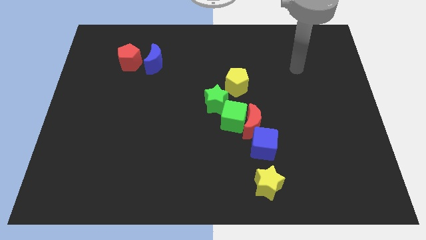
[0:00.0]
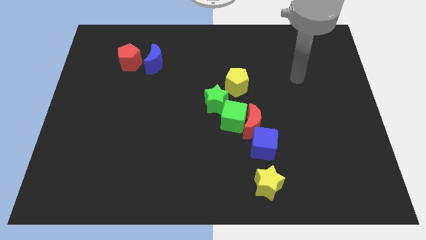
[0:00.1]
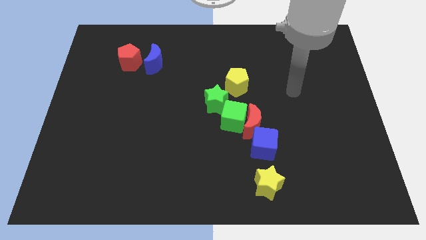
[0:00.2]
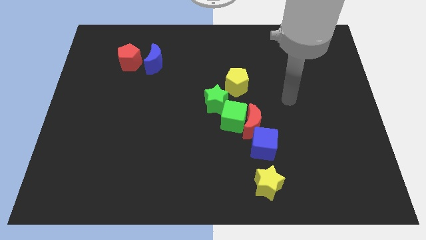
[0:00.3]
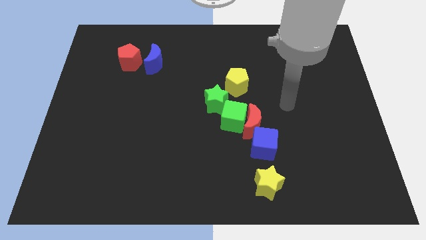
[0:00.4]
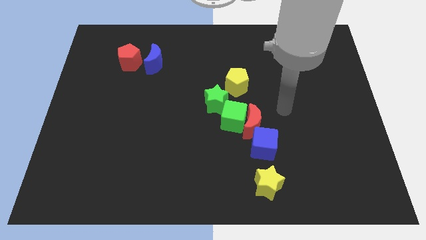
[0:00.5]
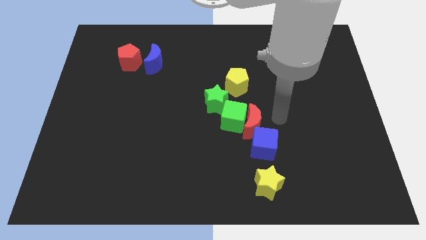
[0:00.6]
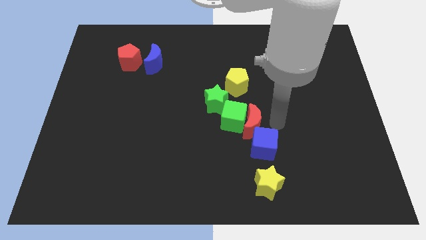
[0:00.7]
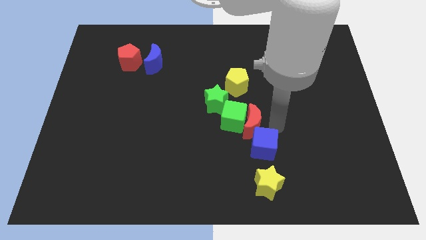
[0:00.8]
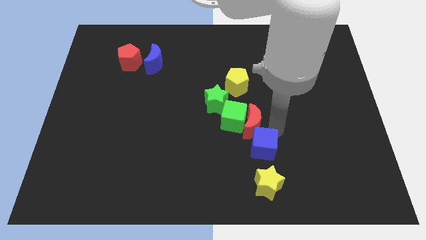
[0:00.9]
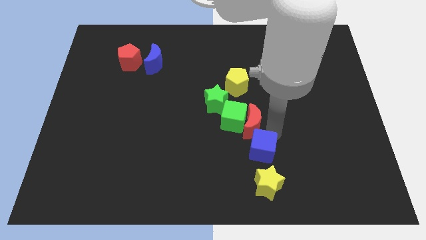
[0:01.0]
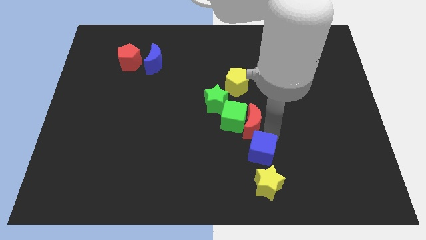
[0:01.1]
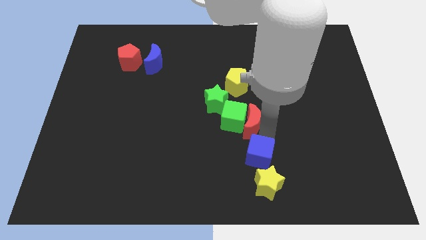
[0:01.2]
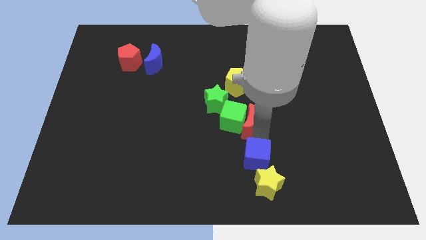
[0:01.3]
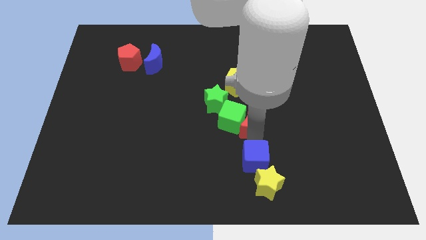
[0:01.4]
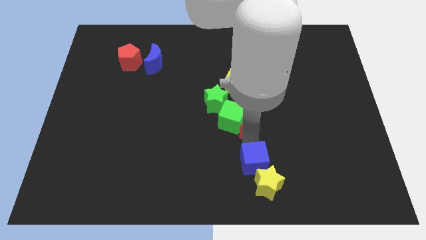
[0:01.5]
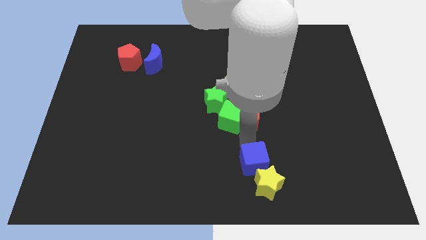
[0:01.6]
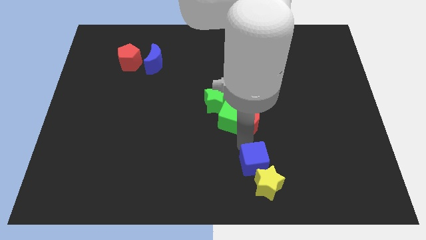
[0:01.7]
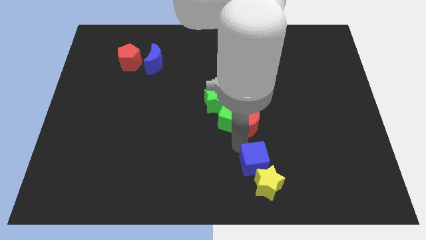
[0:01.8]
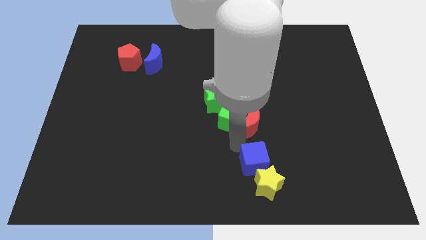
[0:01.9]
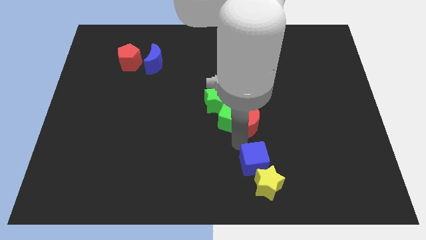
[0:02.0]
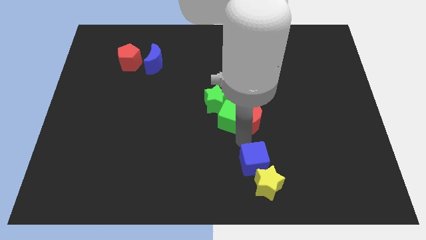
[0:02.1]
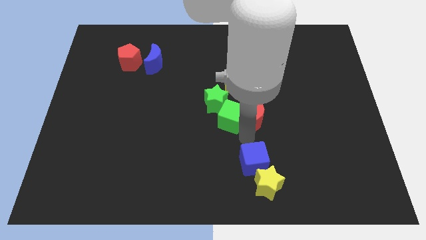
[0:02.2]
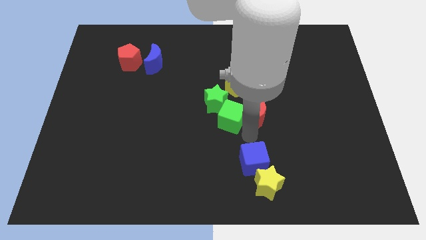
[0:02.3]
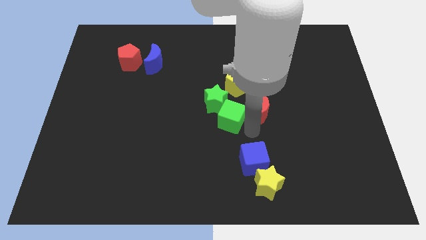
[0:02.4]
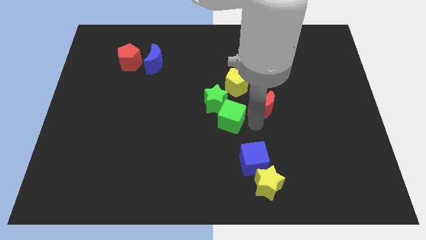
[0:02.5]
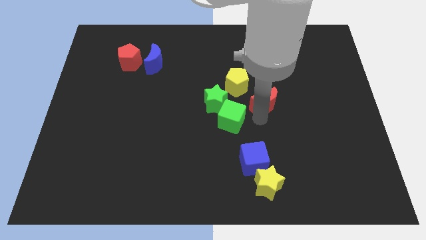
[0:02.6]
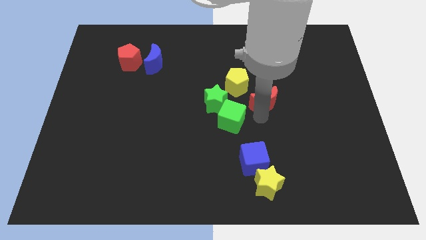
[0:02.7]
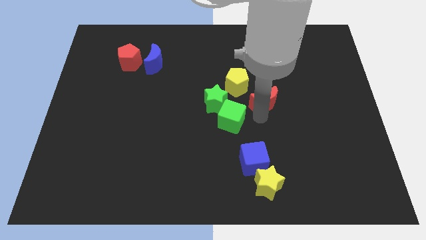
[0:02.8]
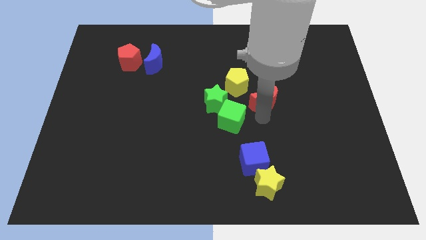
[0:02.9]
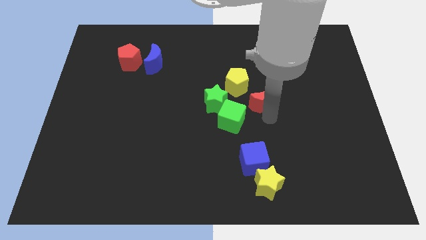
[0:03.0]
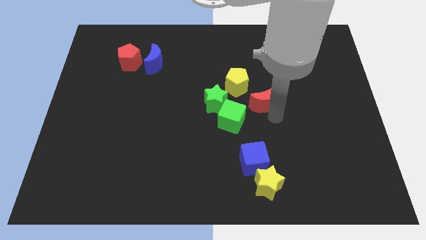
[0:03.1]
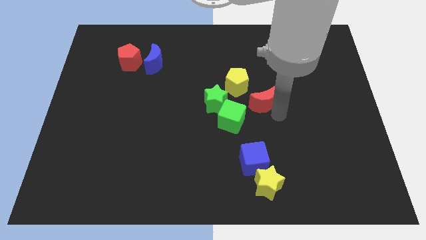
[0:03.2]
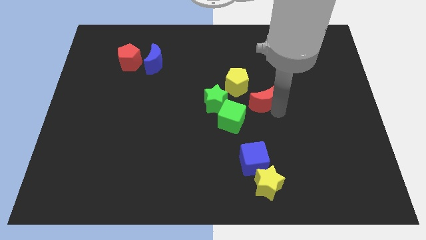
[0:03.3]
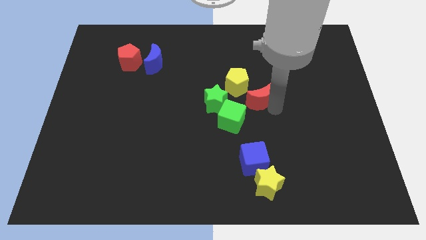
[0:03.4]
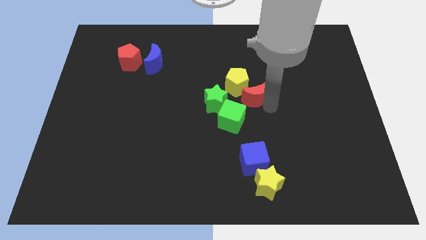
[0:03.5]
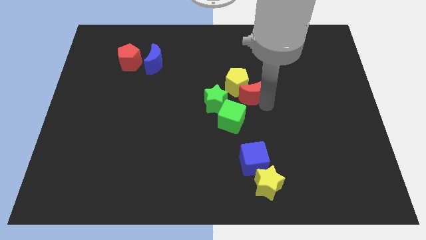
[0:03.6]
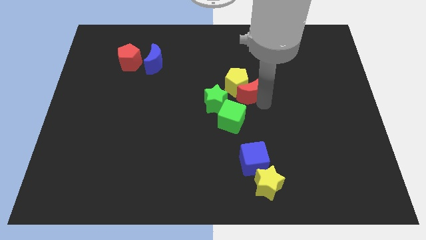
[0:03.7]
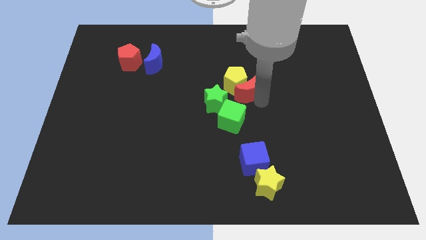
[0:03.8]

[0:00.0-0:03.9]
push the red moon towards the yellow pentagon

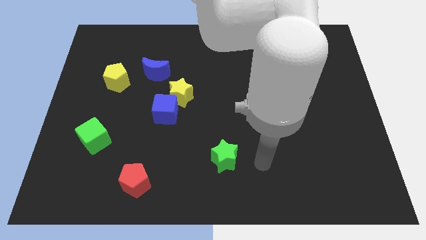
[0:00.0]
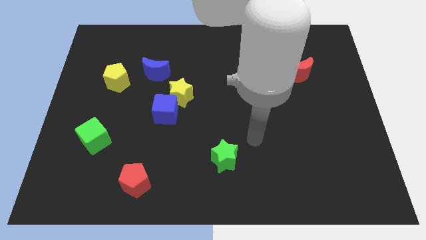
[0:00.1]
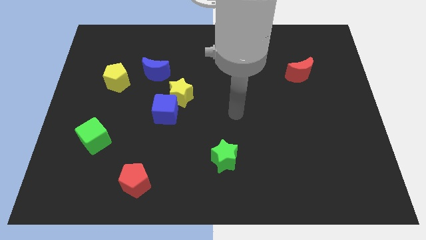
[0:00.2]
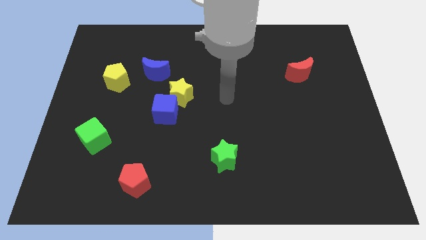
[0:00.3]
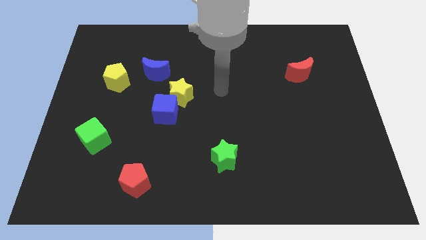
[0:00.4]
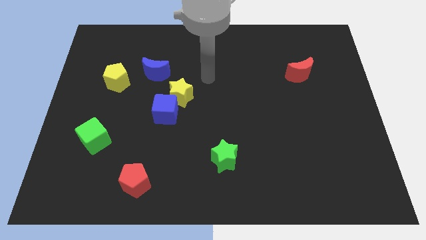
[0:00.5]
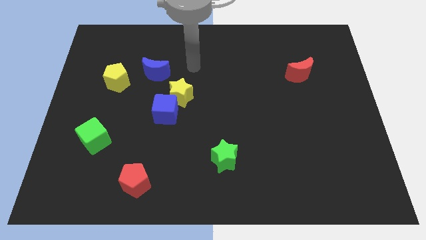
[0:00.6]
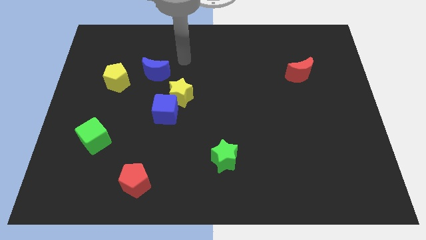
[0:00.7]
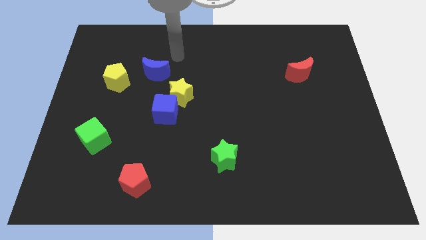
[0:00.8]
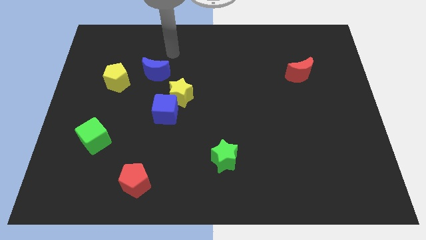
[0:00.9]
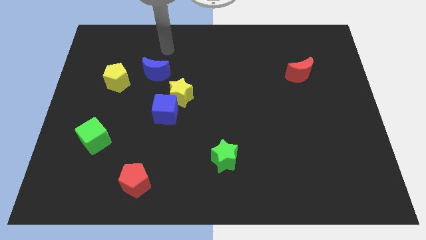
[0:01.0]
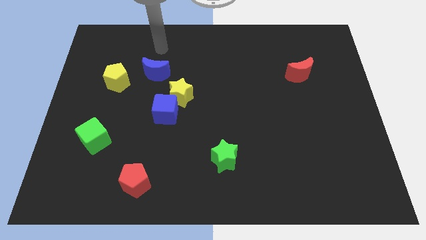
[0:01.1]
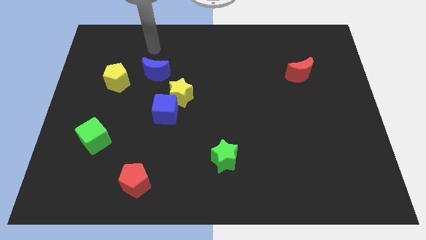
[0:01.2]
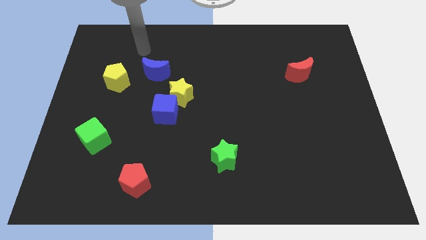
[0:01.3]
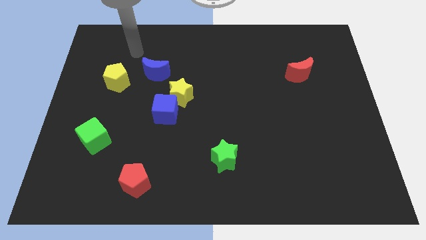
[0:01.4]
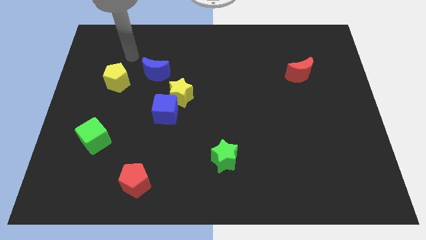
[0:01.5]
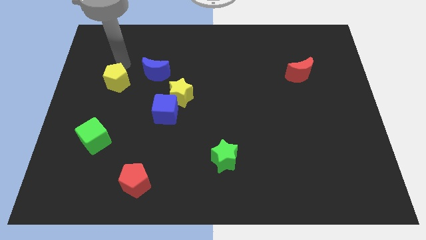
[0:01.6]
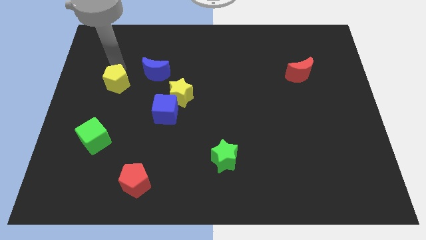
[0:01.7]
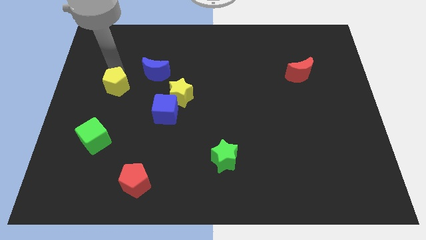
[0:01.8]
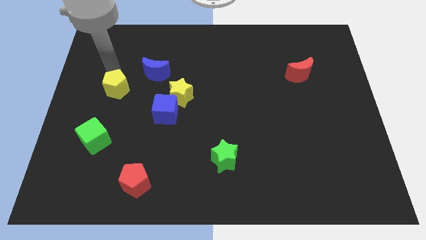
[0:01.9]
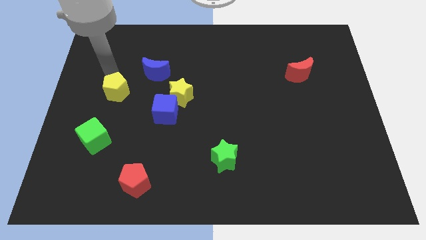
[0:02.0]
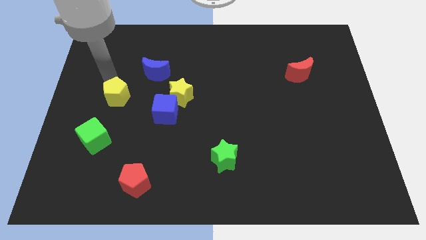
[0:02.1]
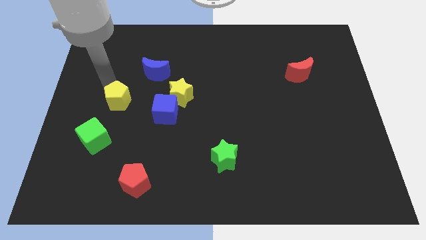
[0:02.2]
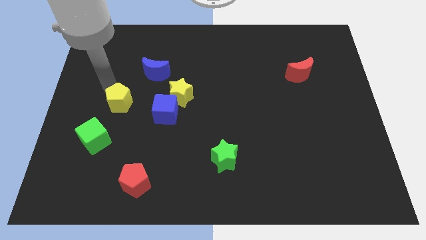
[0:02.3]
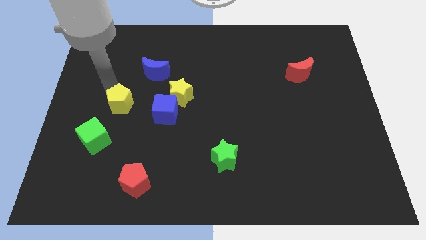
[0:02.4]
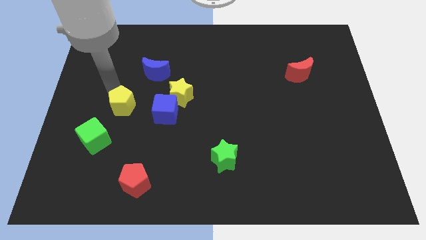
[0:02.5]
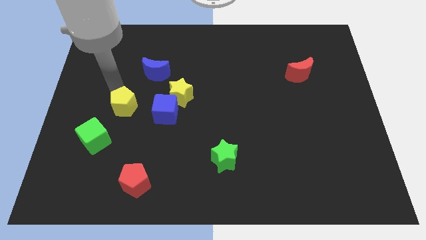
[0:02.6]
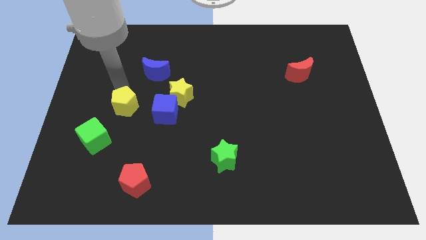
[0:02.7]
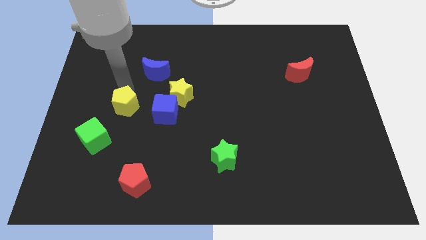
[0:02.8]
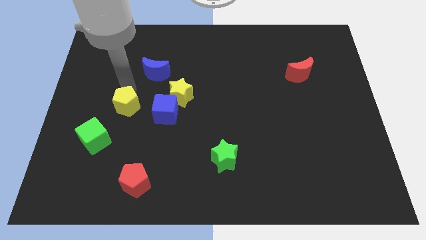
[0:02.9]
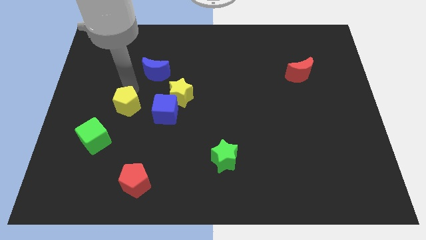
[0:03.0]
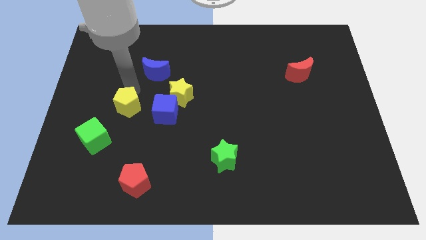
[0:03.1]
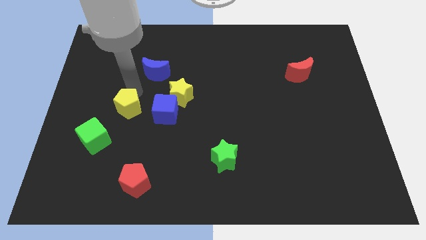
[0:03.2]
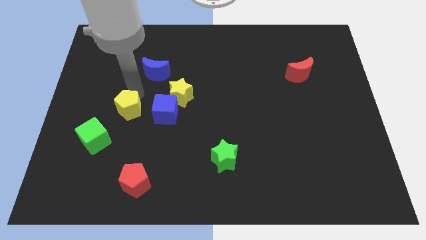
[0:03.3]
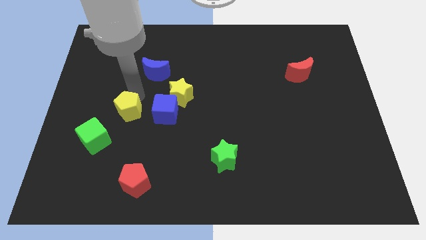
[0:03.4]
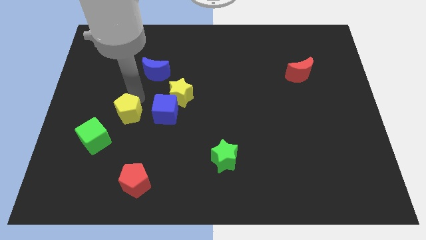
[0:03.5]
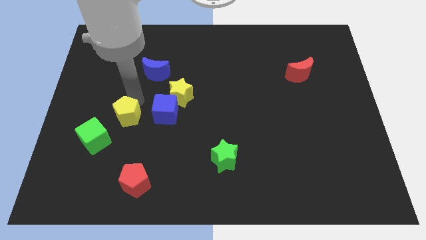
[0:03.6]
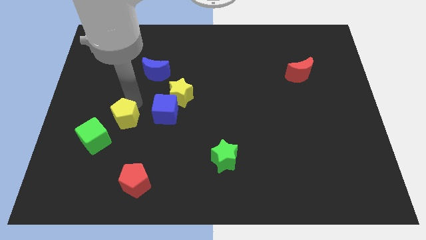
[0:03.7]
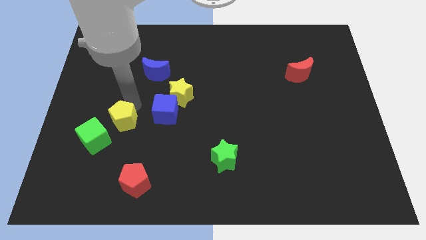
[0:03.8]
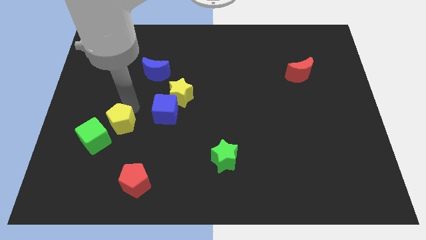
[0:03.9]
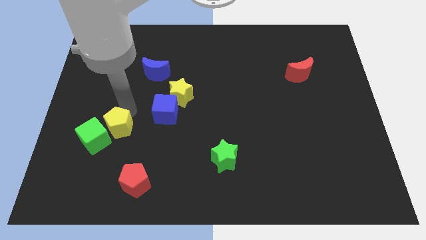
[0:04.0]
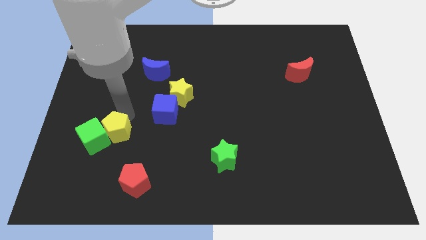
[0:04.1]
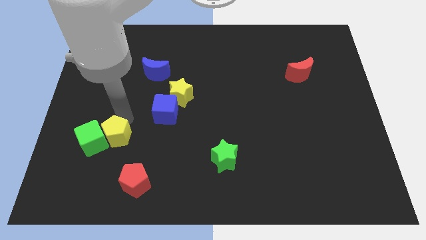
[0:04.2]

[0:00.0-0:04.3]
move the yellow pentagon to the green cube

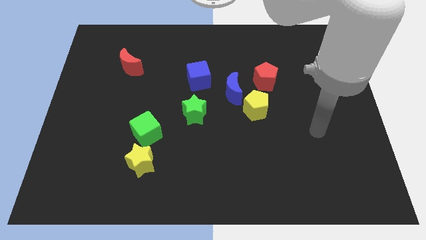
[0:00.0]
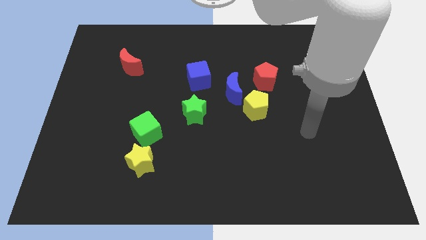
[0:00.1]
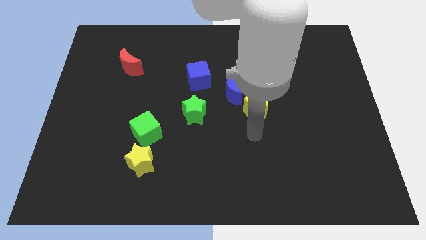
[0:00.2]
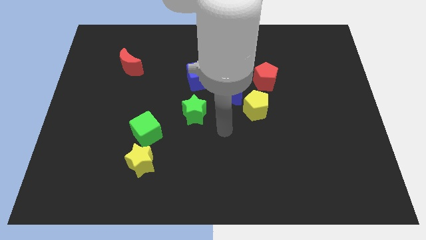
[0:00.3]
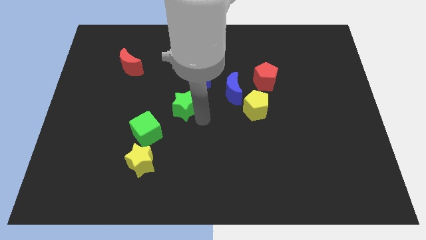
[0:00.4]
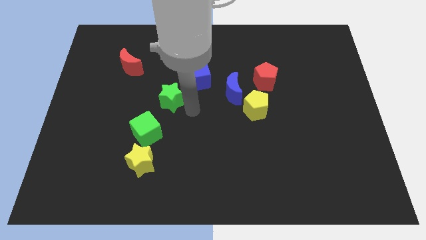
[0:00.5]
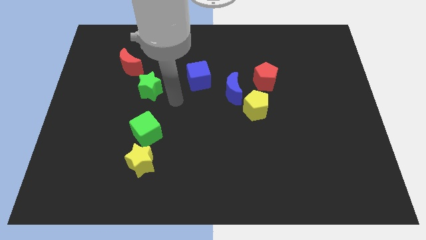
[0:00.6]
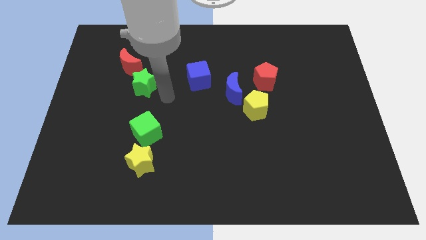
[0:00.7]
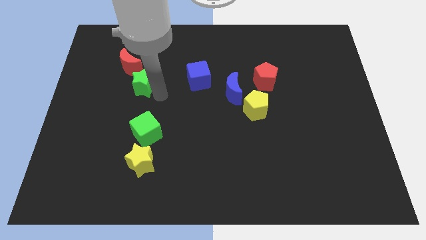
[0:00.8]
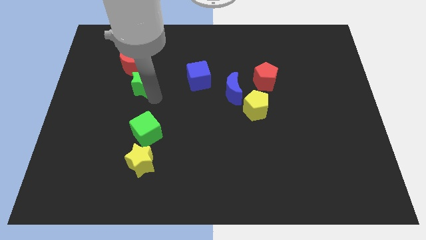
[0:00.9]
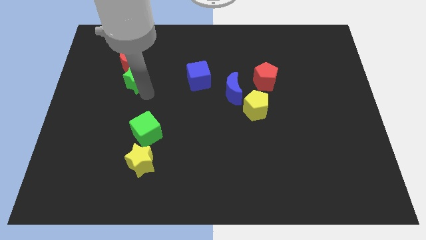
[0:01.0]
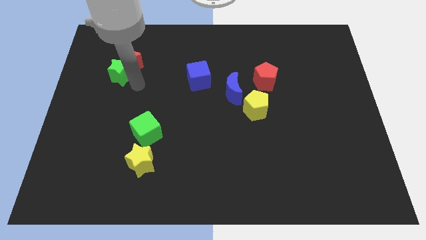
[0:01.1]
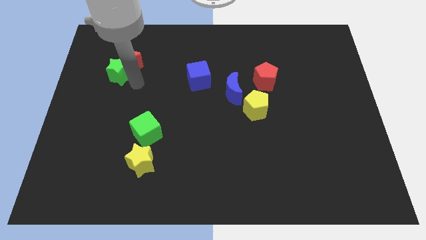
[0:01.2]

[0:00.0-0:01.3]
push the green star close to the red moon
